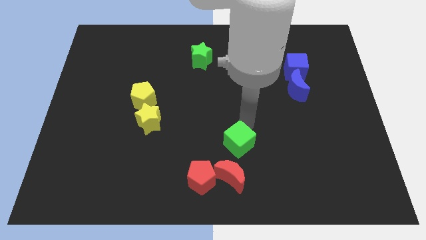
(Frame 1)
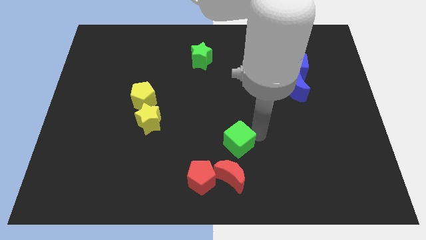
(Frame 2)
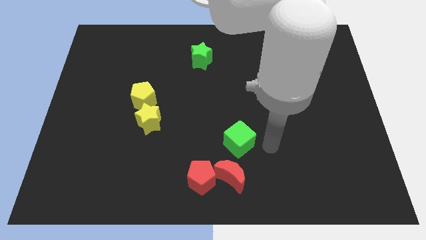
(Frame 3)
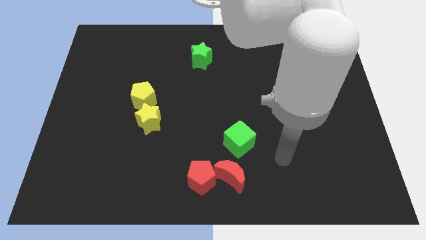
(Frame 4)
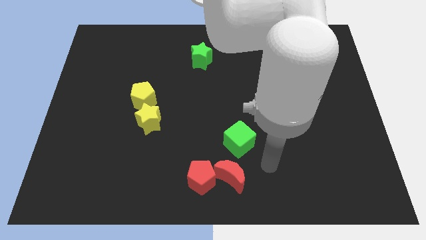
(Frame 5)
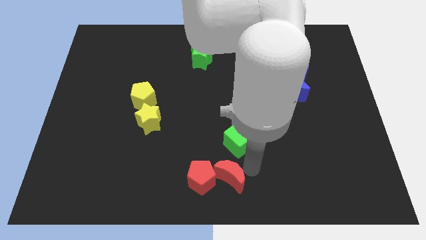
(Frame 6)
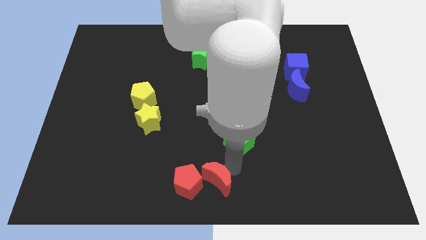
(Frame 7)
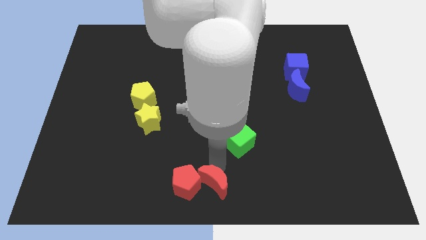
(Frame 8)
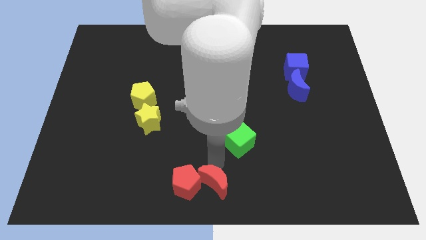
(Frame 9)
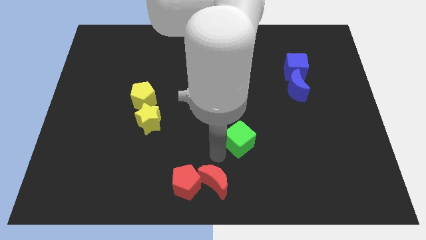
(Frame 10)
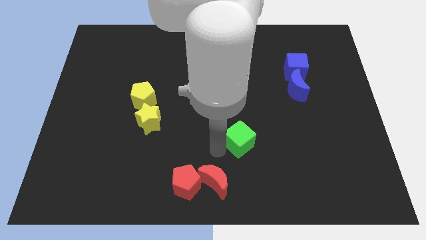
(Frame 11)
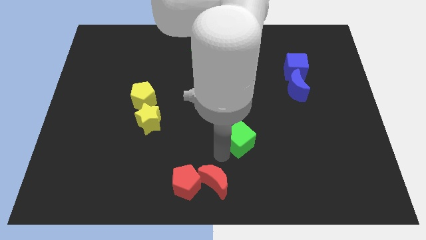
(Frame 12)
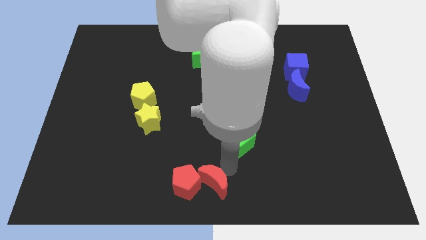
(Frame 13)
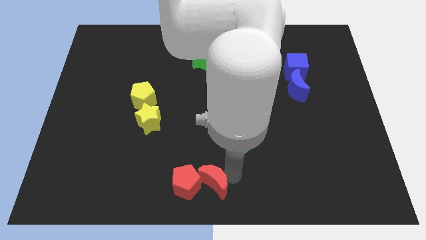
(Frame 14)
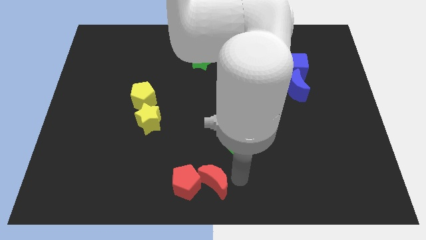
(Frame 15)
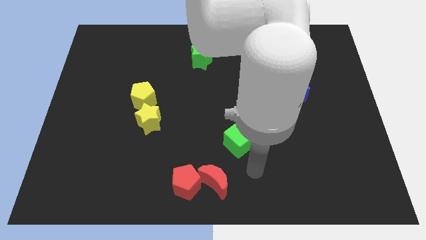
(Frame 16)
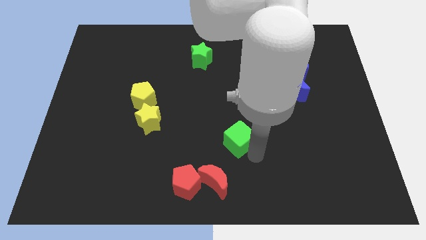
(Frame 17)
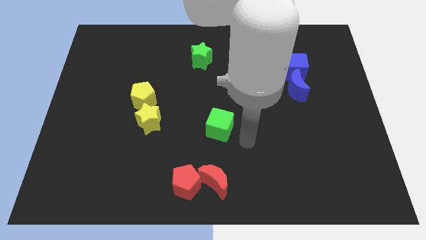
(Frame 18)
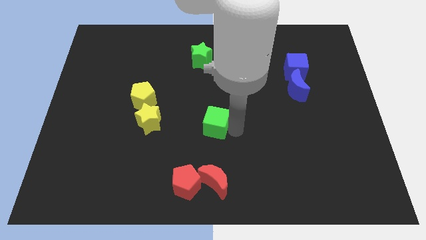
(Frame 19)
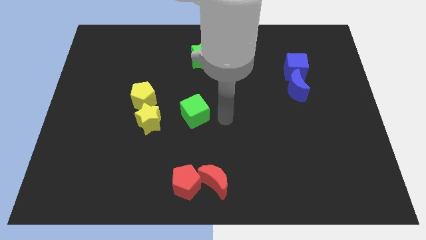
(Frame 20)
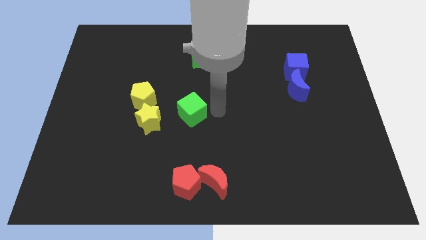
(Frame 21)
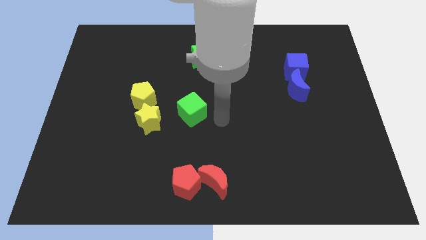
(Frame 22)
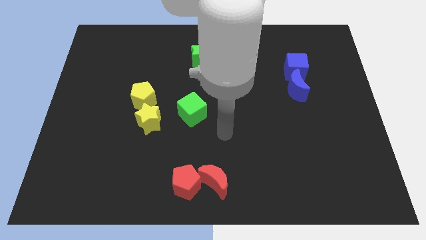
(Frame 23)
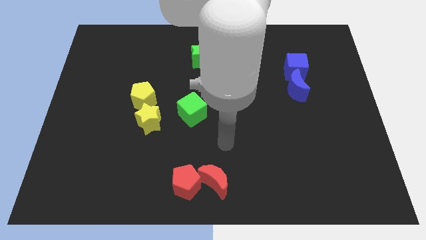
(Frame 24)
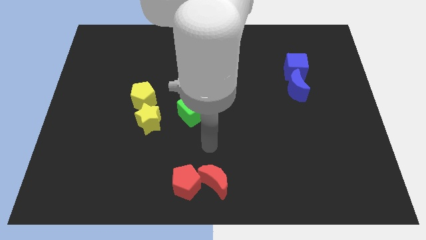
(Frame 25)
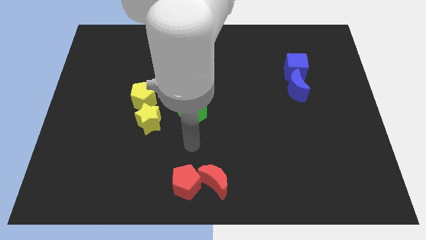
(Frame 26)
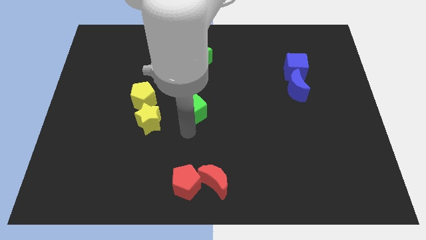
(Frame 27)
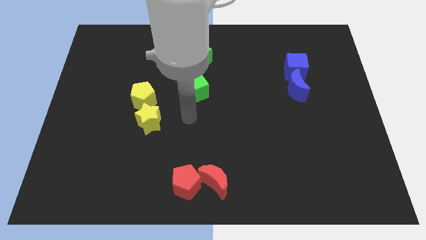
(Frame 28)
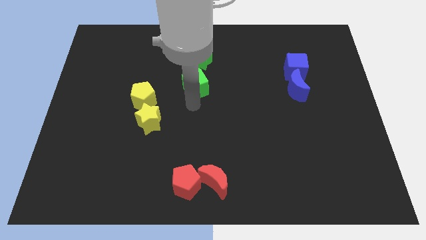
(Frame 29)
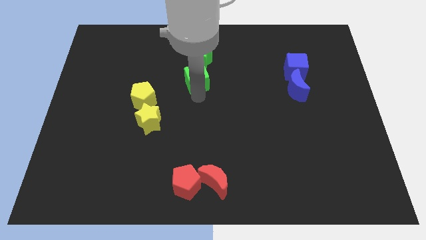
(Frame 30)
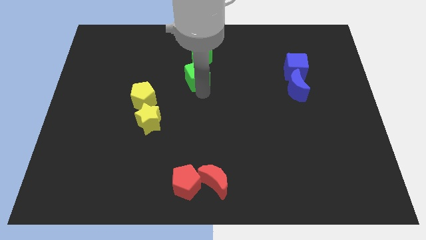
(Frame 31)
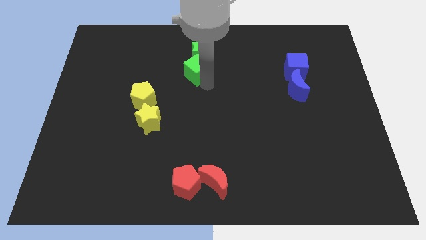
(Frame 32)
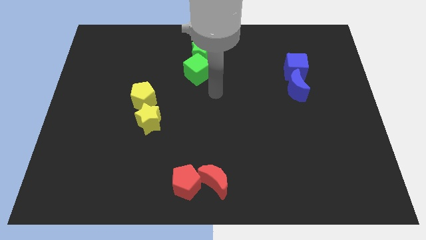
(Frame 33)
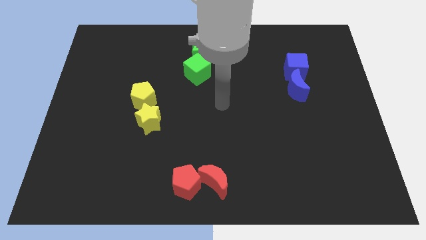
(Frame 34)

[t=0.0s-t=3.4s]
move green blocks together at the top center

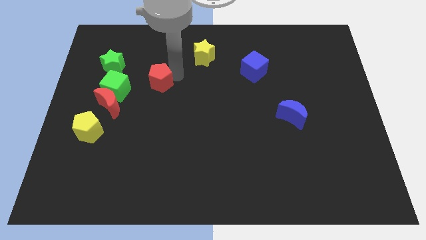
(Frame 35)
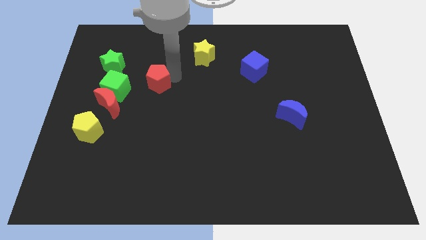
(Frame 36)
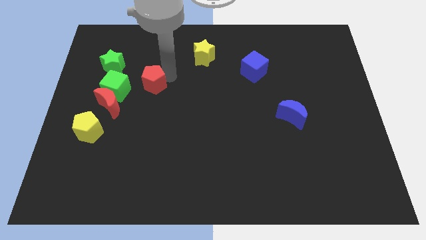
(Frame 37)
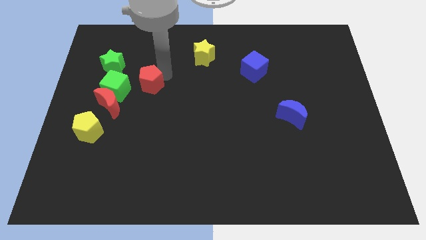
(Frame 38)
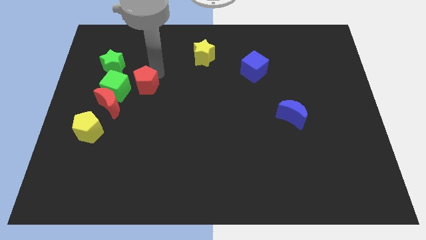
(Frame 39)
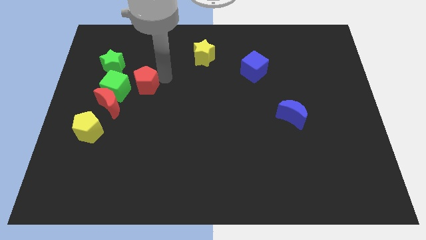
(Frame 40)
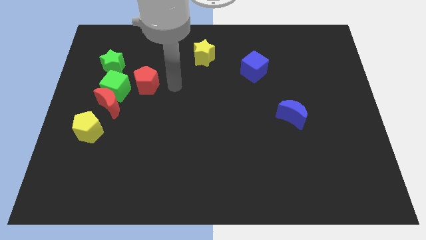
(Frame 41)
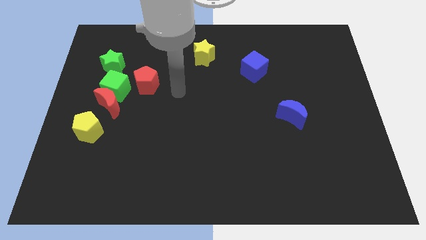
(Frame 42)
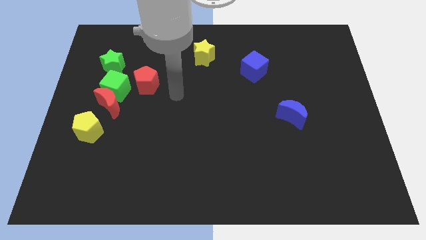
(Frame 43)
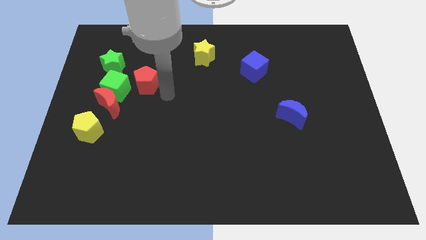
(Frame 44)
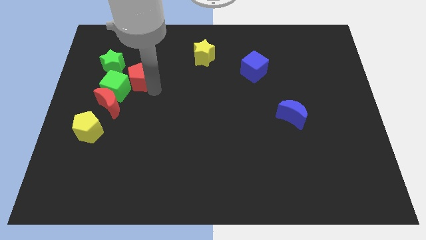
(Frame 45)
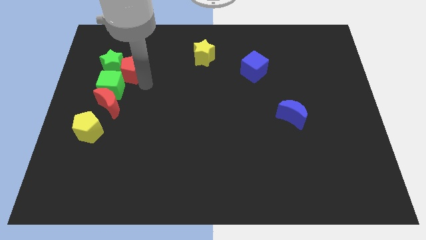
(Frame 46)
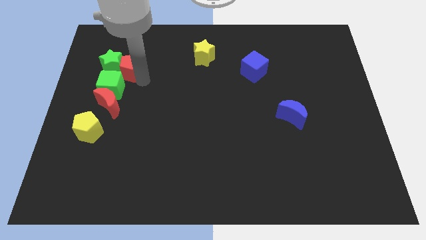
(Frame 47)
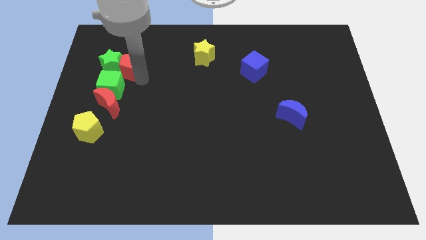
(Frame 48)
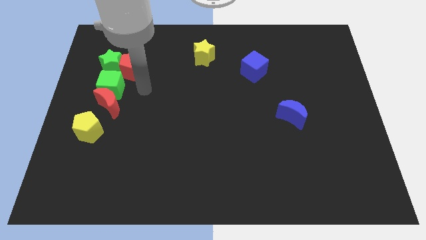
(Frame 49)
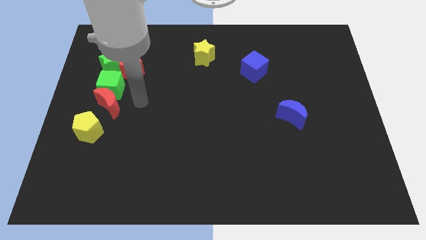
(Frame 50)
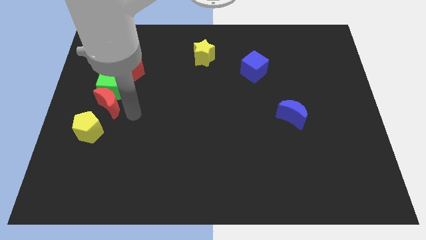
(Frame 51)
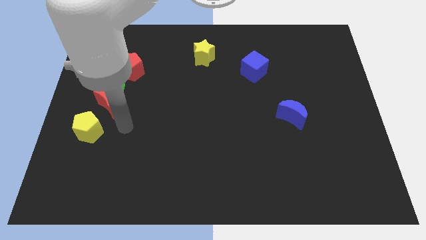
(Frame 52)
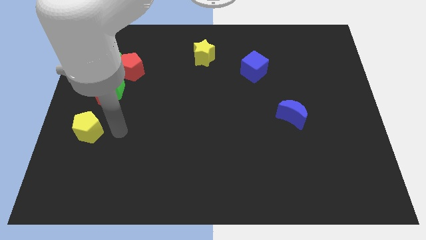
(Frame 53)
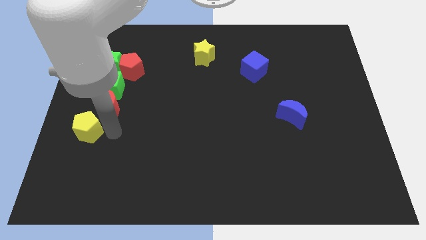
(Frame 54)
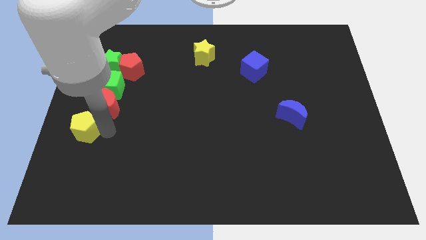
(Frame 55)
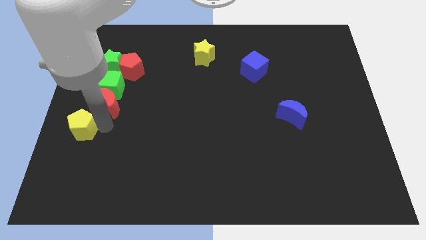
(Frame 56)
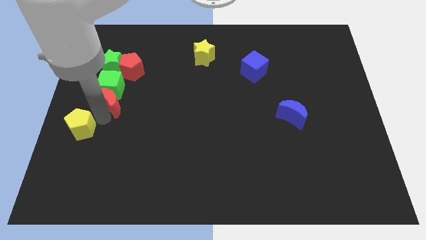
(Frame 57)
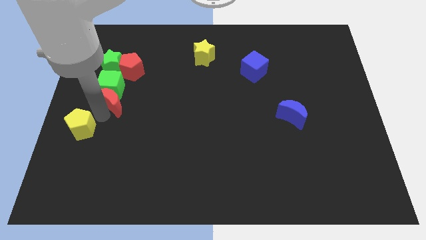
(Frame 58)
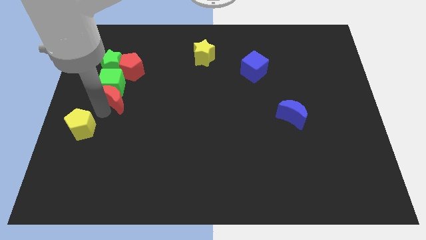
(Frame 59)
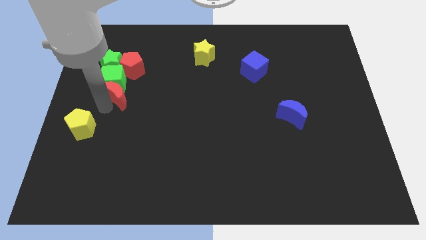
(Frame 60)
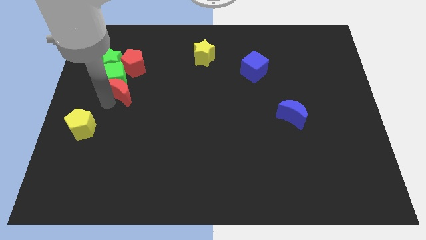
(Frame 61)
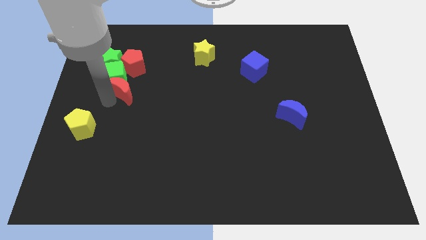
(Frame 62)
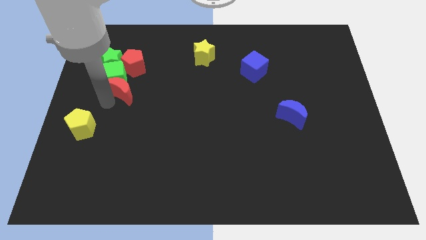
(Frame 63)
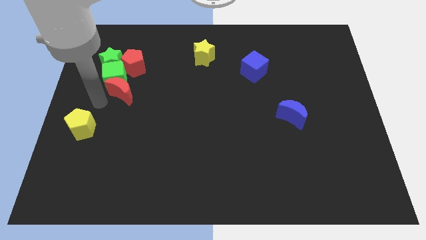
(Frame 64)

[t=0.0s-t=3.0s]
push the blocks slightly towards the top side with the red crescent

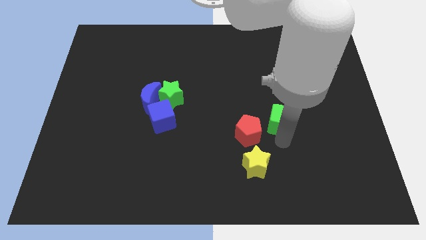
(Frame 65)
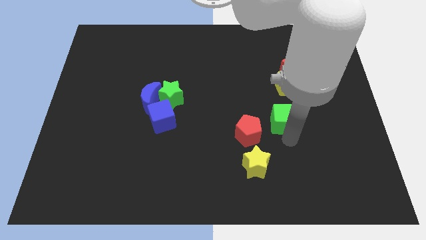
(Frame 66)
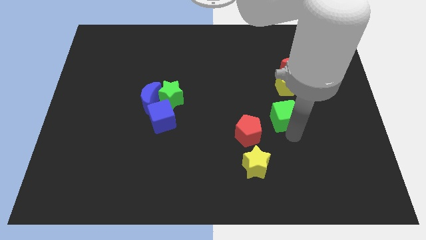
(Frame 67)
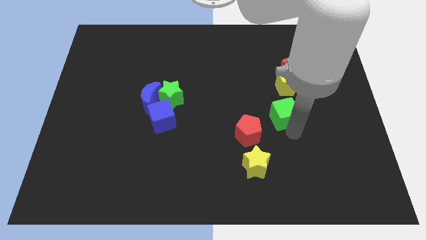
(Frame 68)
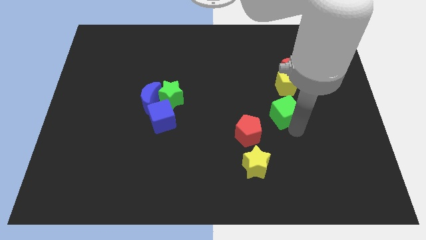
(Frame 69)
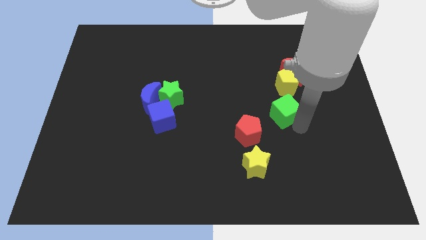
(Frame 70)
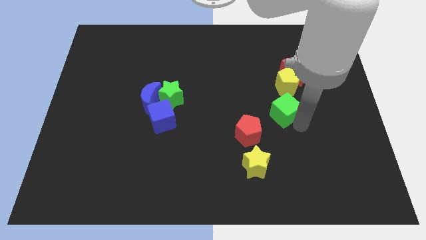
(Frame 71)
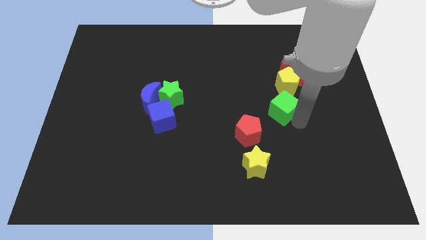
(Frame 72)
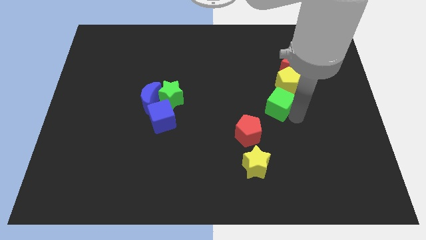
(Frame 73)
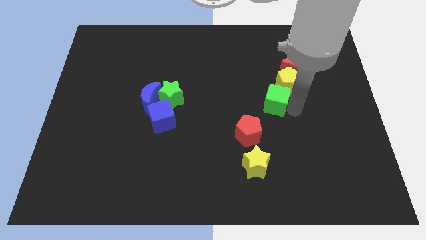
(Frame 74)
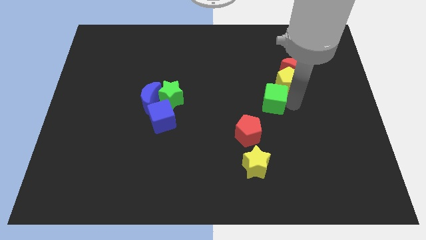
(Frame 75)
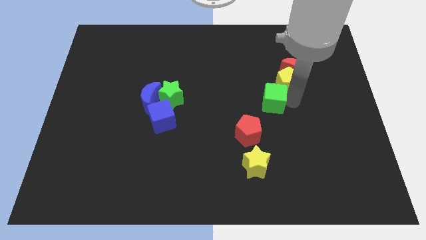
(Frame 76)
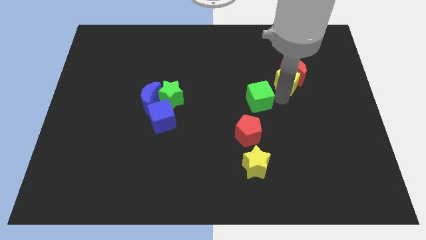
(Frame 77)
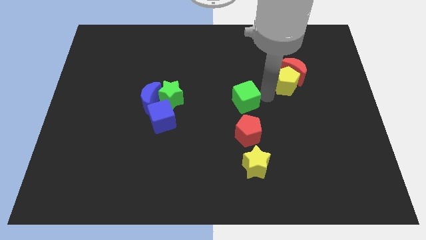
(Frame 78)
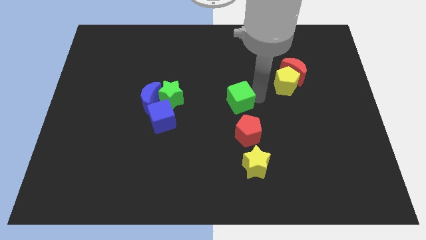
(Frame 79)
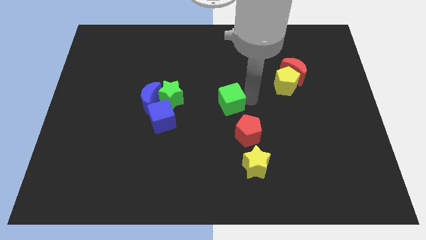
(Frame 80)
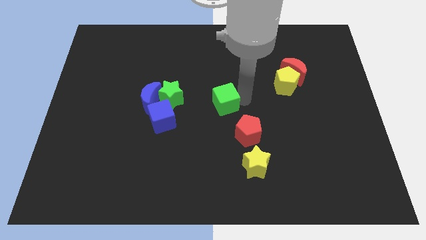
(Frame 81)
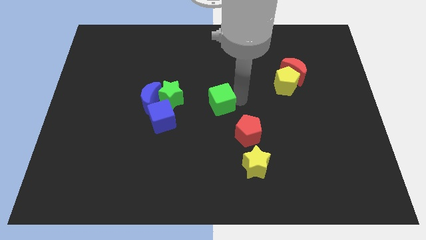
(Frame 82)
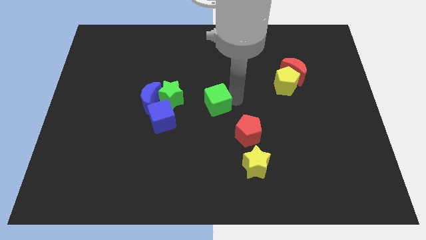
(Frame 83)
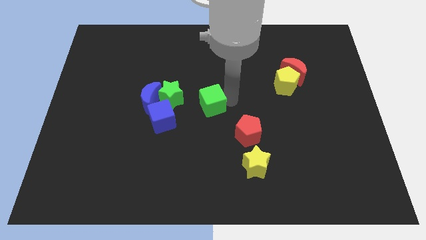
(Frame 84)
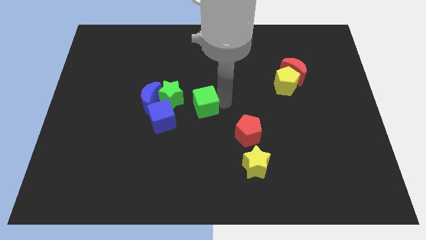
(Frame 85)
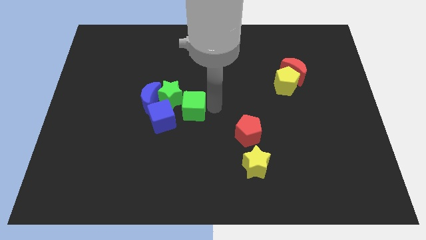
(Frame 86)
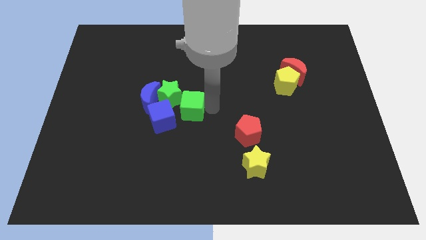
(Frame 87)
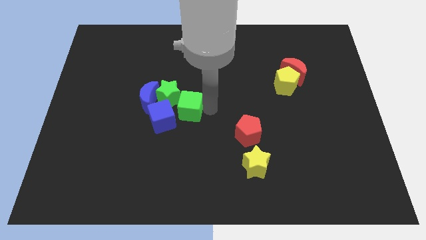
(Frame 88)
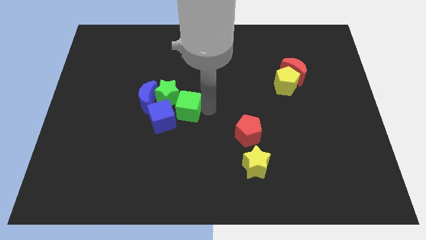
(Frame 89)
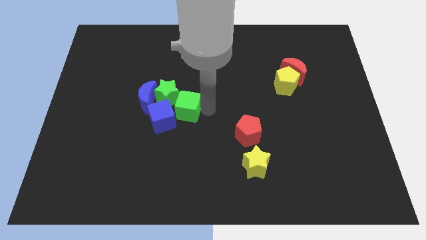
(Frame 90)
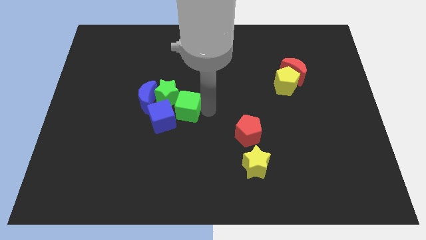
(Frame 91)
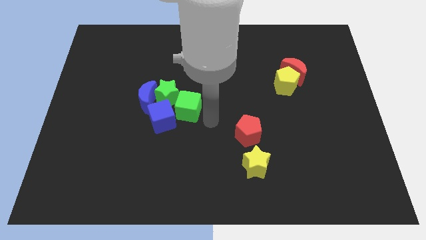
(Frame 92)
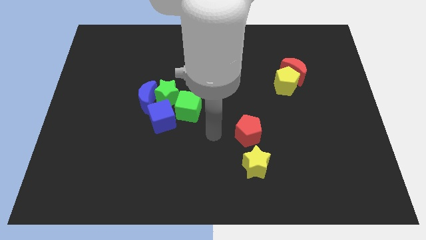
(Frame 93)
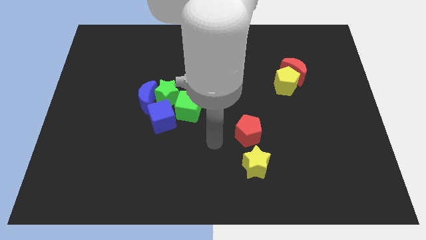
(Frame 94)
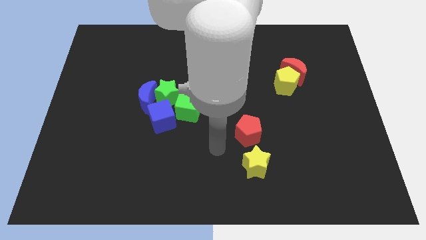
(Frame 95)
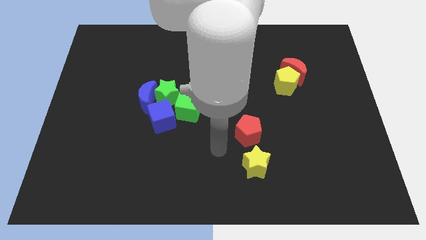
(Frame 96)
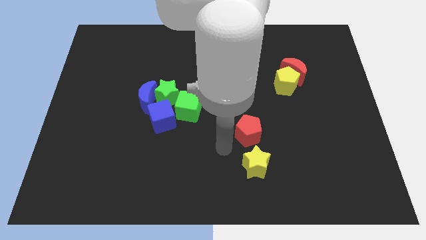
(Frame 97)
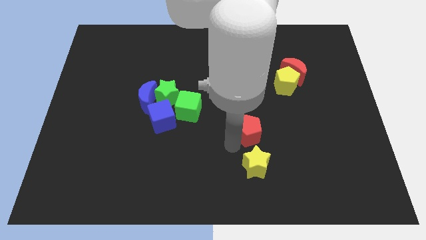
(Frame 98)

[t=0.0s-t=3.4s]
move the green cube into the green star
